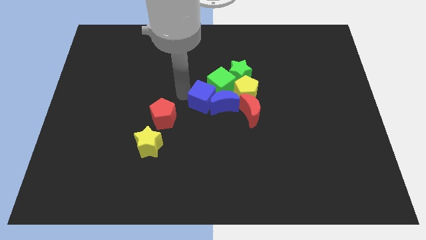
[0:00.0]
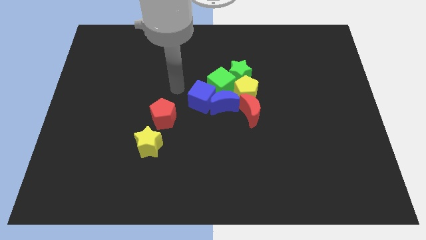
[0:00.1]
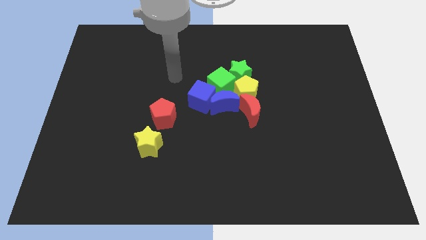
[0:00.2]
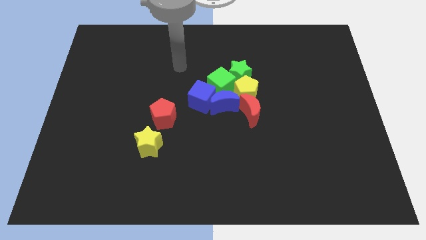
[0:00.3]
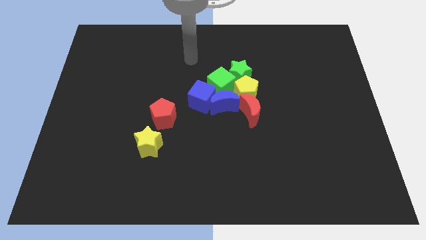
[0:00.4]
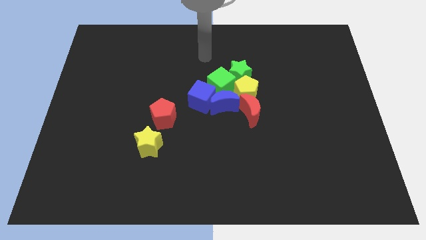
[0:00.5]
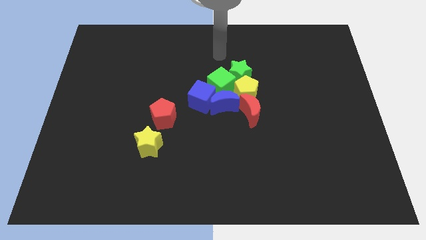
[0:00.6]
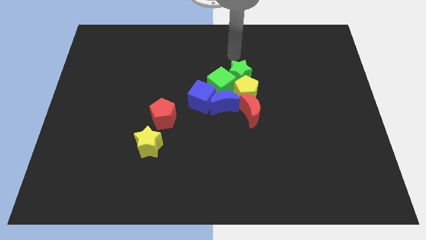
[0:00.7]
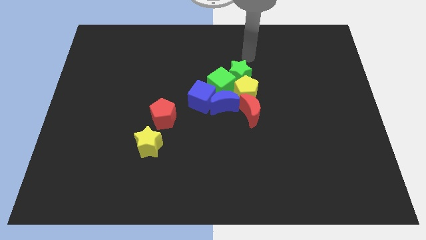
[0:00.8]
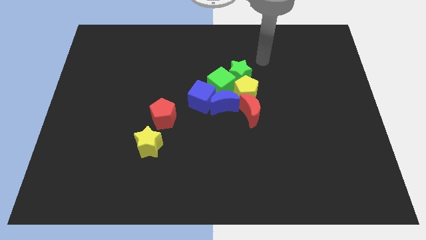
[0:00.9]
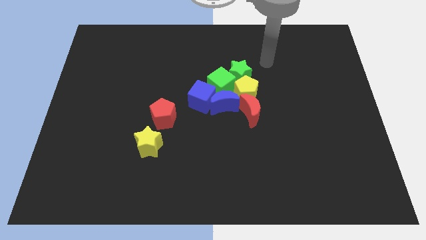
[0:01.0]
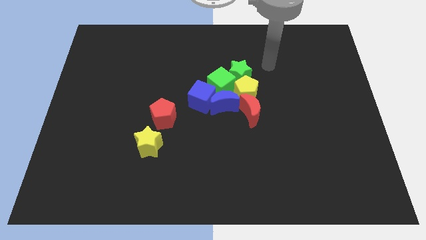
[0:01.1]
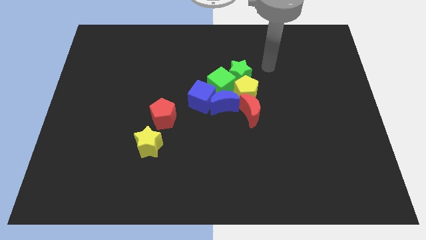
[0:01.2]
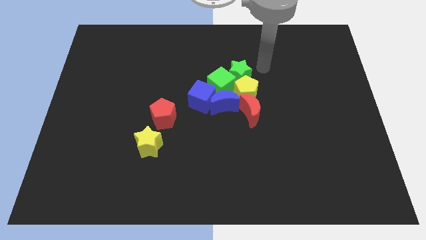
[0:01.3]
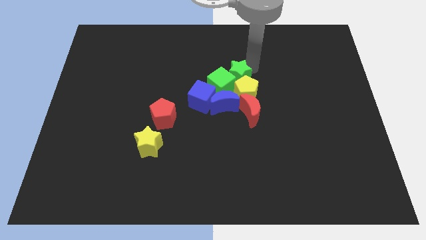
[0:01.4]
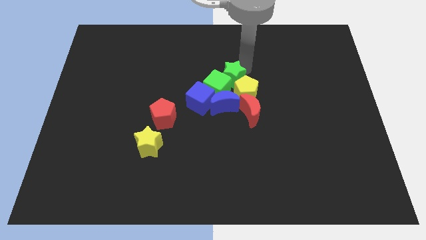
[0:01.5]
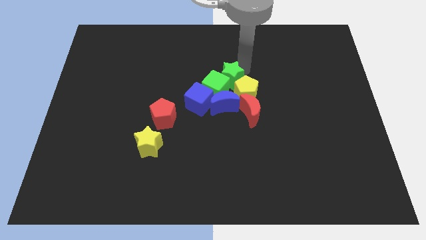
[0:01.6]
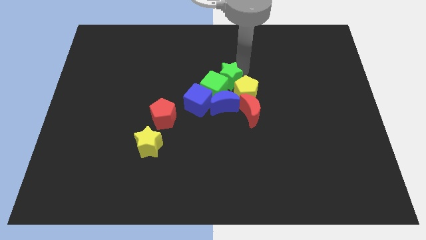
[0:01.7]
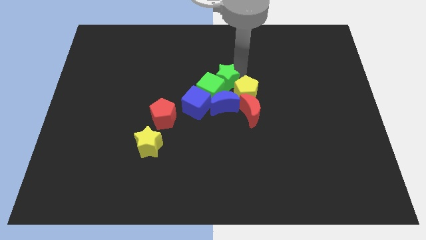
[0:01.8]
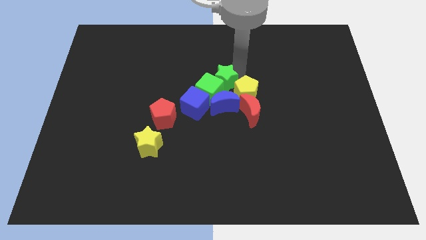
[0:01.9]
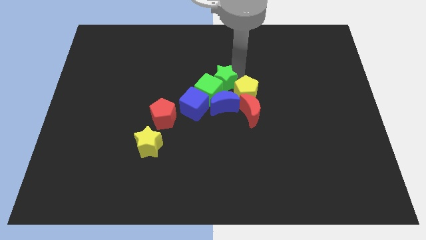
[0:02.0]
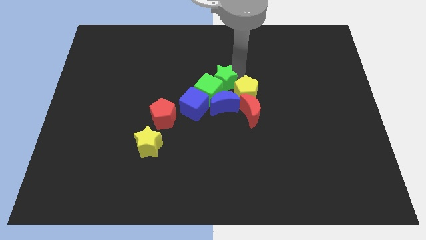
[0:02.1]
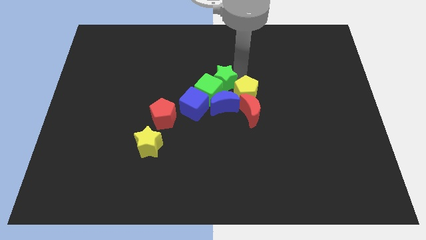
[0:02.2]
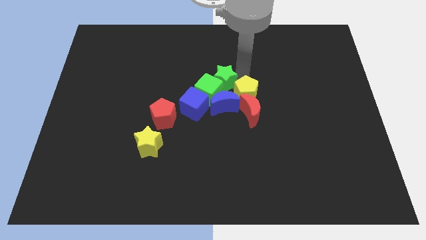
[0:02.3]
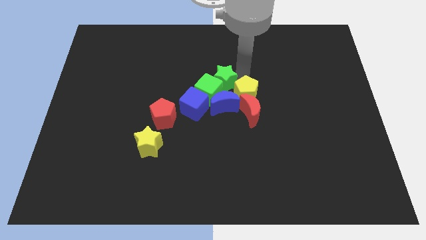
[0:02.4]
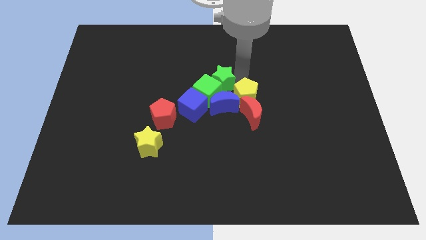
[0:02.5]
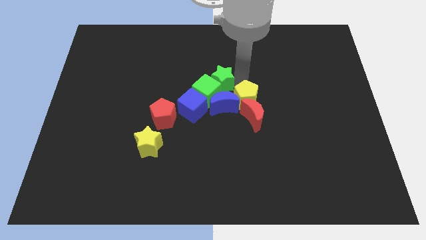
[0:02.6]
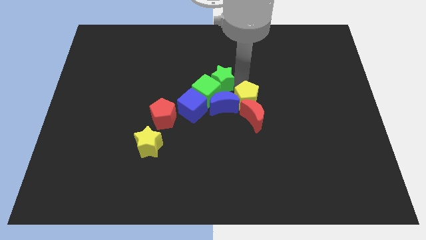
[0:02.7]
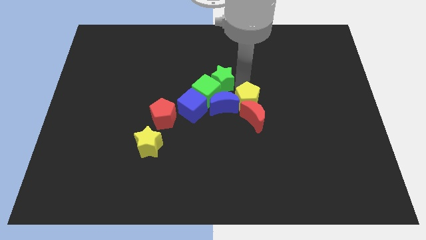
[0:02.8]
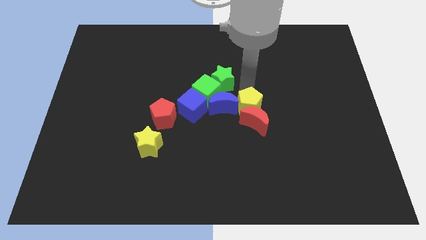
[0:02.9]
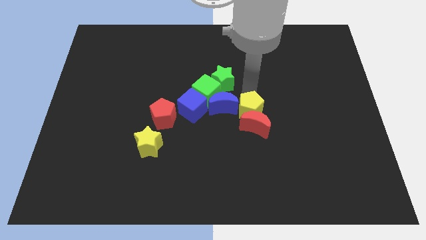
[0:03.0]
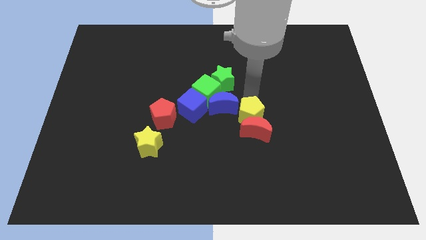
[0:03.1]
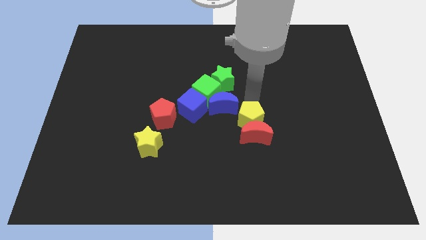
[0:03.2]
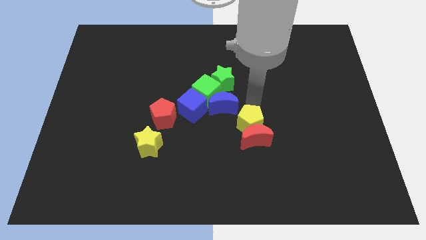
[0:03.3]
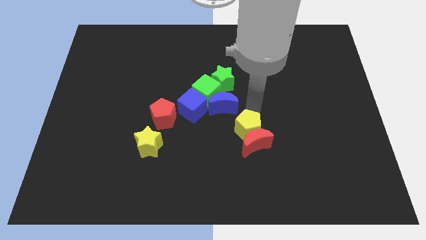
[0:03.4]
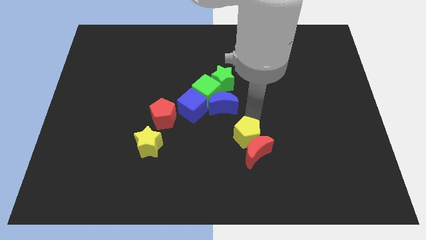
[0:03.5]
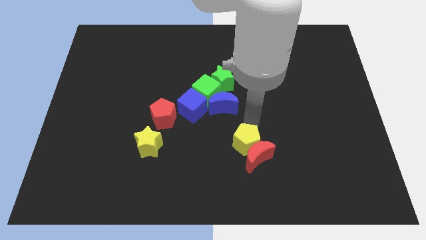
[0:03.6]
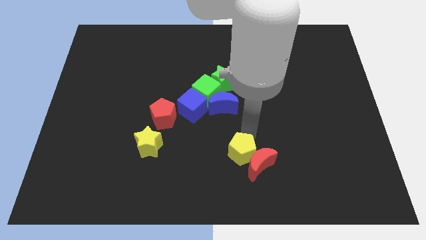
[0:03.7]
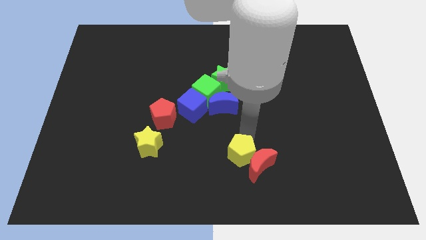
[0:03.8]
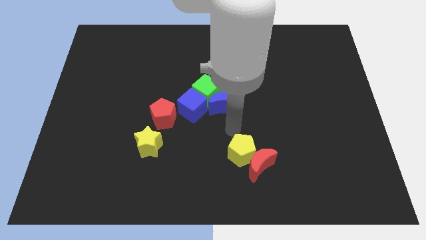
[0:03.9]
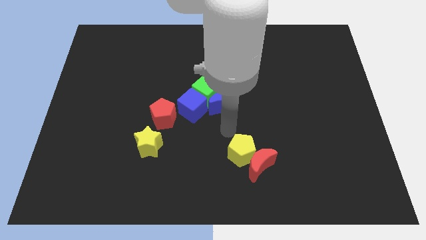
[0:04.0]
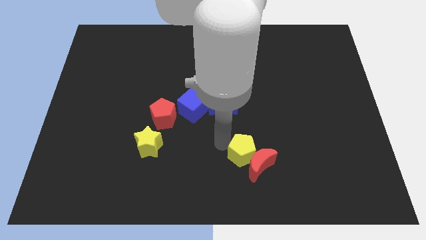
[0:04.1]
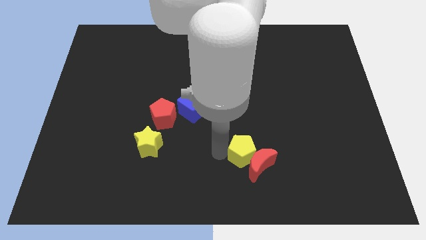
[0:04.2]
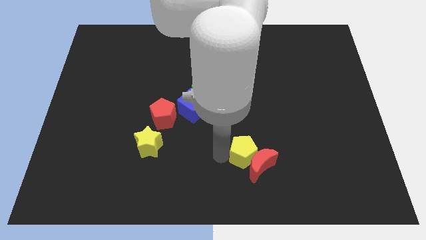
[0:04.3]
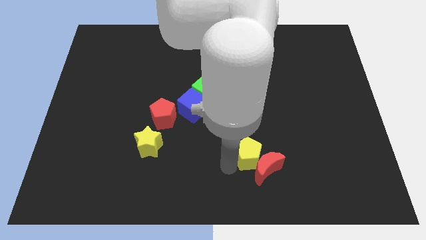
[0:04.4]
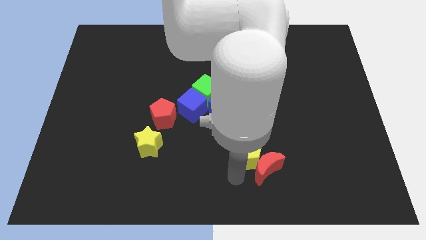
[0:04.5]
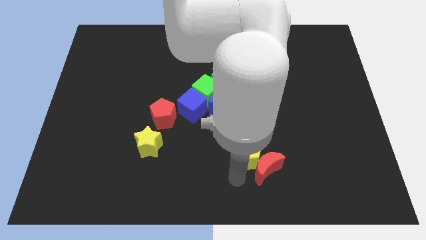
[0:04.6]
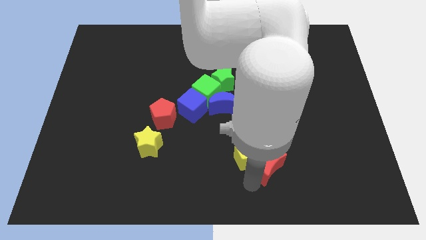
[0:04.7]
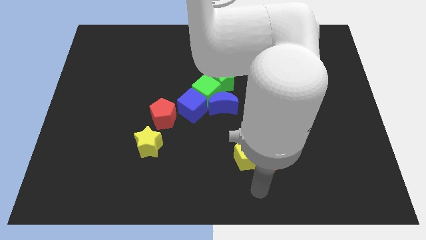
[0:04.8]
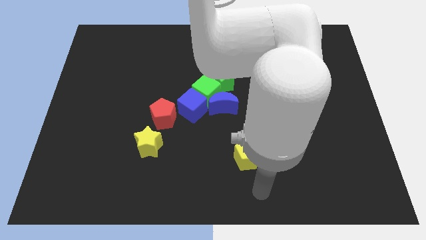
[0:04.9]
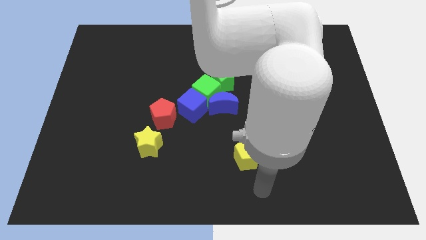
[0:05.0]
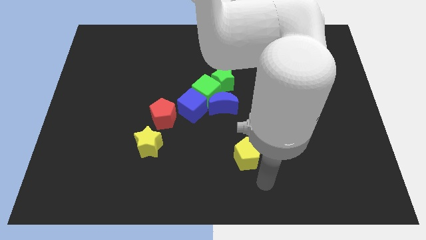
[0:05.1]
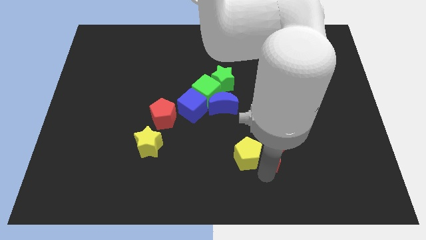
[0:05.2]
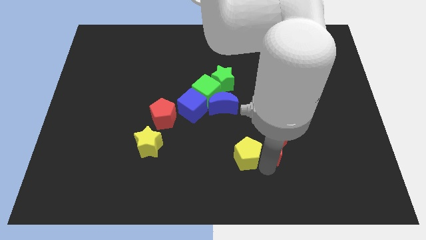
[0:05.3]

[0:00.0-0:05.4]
separate yellow pentagon and red crescent from the group

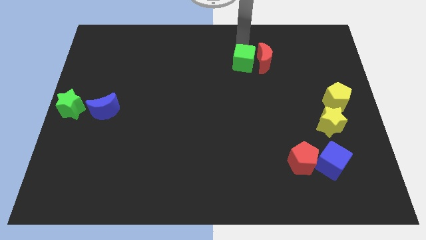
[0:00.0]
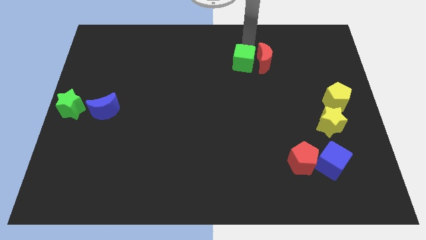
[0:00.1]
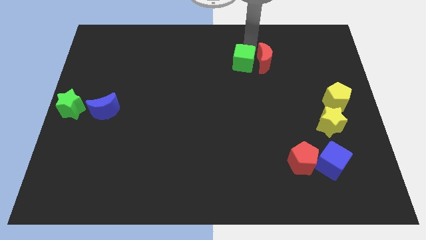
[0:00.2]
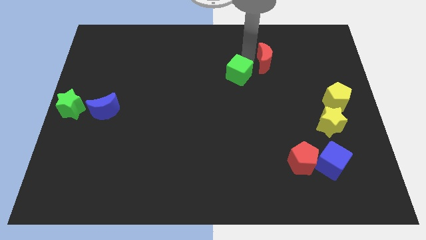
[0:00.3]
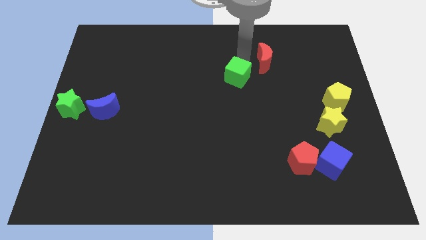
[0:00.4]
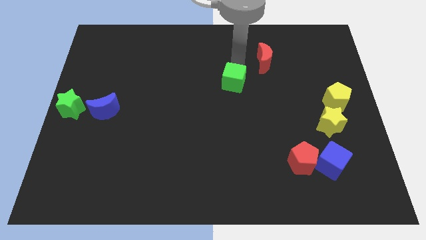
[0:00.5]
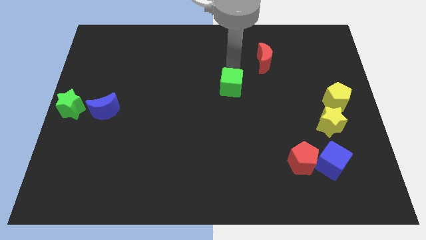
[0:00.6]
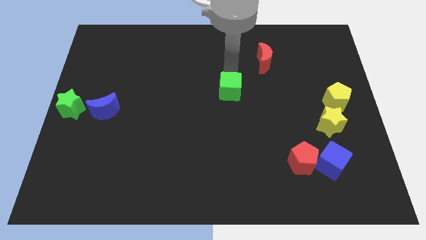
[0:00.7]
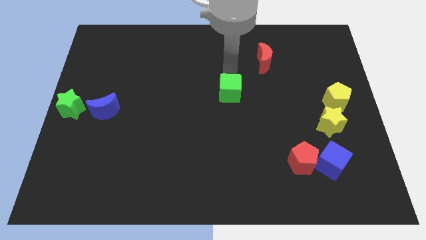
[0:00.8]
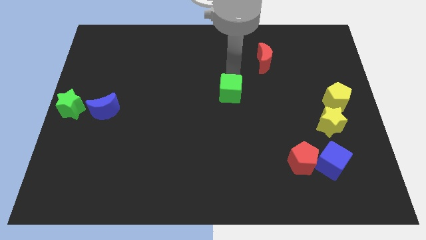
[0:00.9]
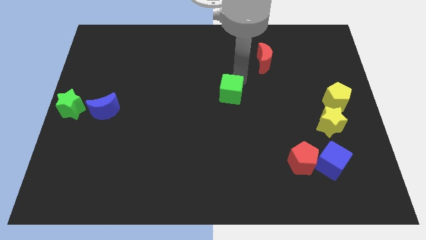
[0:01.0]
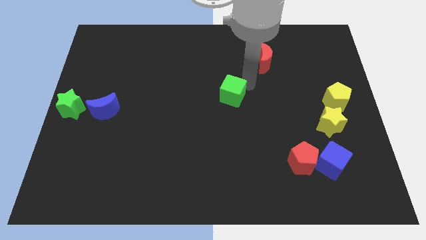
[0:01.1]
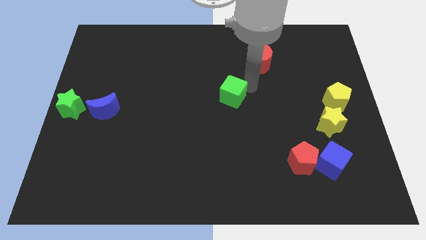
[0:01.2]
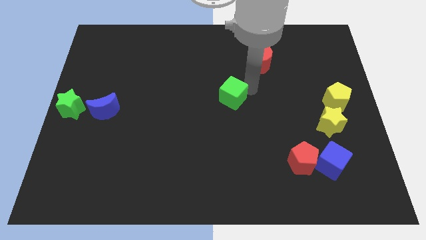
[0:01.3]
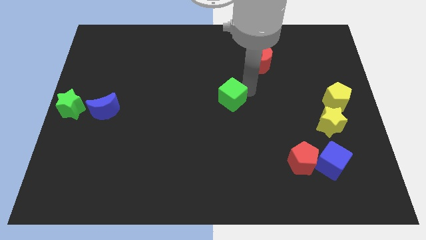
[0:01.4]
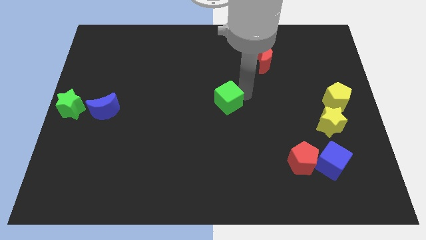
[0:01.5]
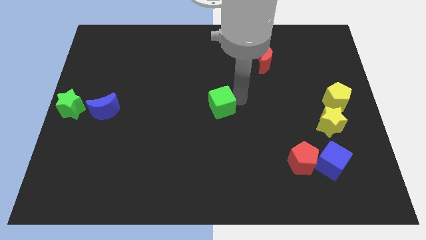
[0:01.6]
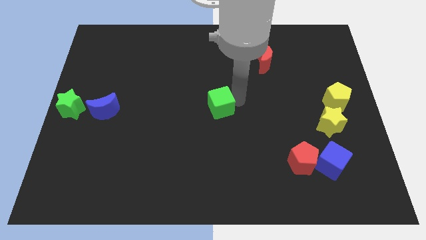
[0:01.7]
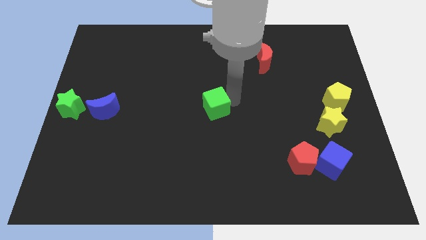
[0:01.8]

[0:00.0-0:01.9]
move the green cube towards the center of the board

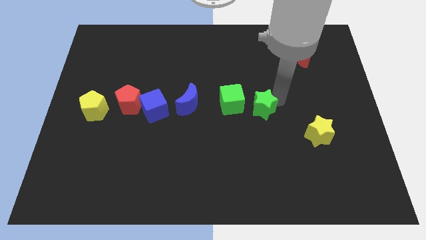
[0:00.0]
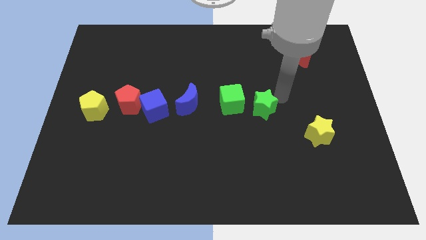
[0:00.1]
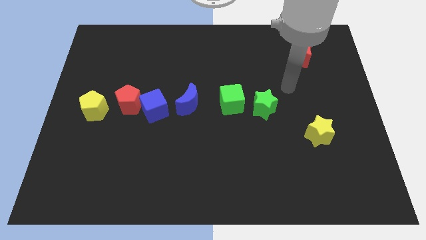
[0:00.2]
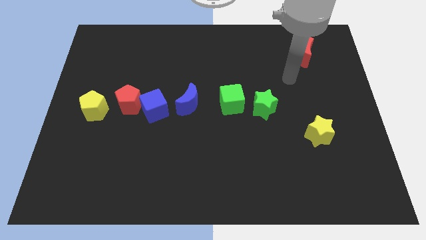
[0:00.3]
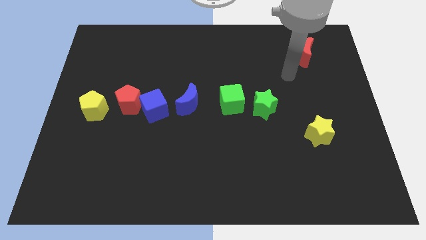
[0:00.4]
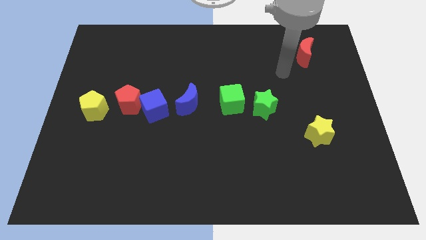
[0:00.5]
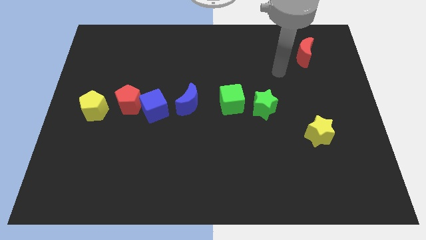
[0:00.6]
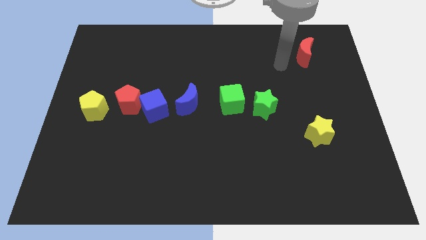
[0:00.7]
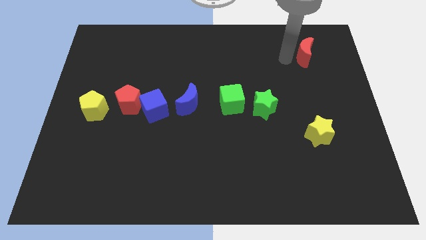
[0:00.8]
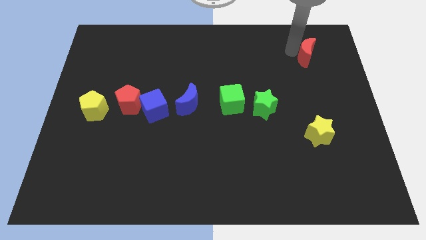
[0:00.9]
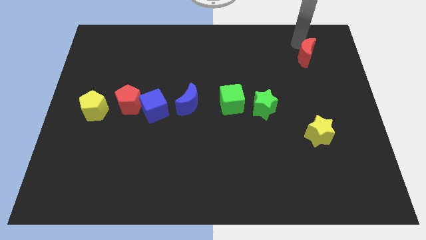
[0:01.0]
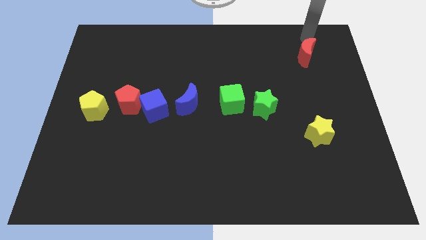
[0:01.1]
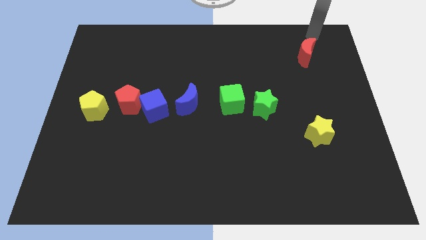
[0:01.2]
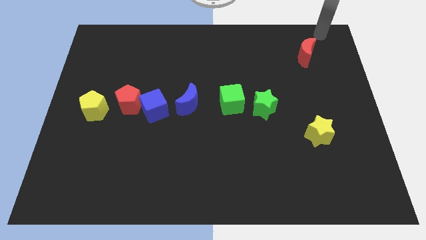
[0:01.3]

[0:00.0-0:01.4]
place the arm above the red moon
